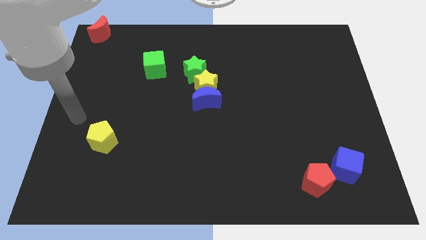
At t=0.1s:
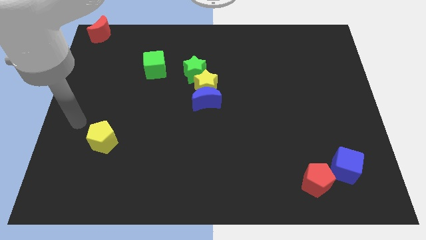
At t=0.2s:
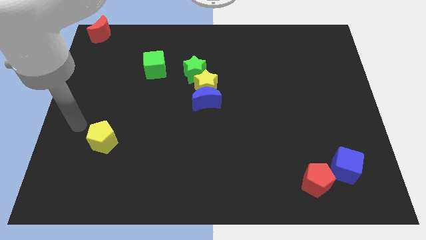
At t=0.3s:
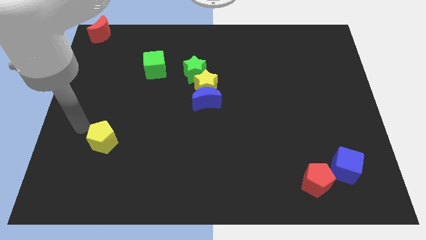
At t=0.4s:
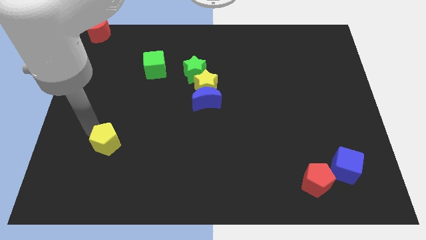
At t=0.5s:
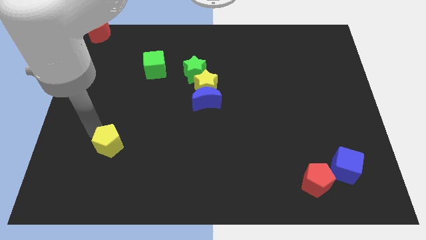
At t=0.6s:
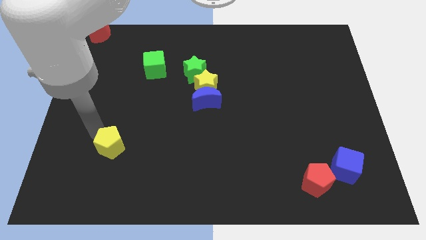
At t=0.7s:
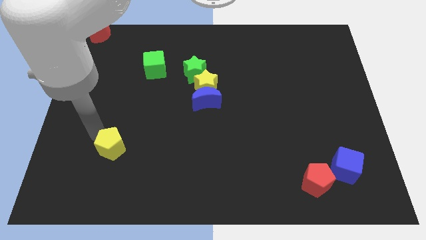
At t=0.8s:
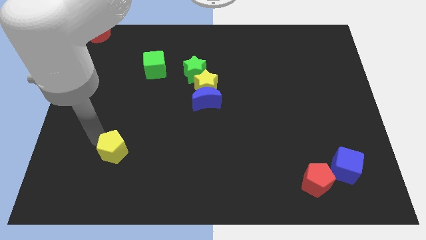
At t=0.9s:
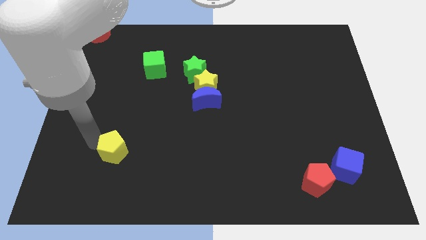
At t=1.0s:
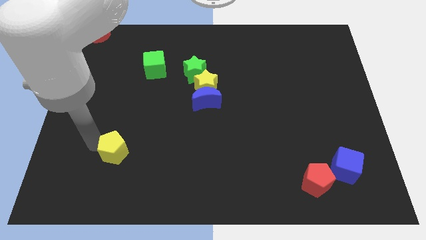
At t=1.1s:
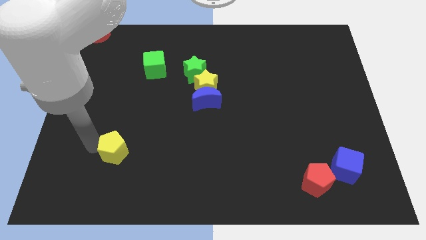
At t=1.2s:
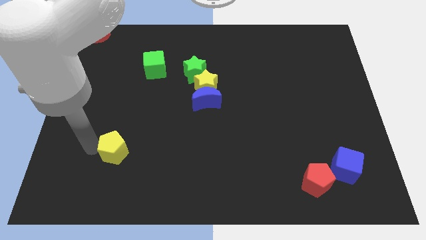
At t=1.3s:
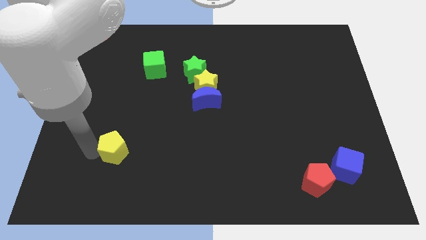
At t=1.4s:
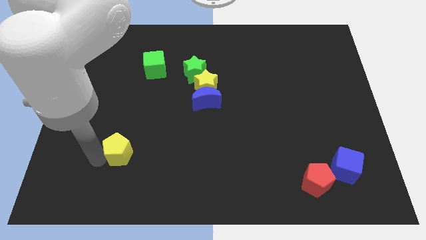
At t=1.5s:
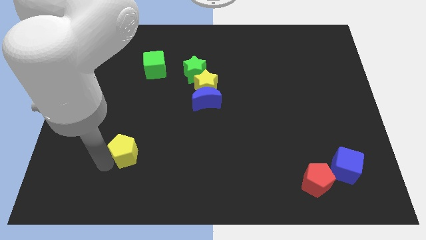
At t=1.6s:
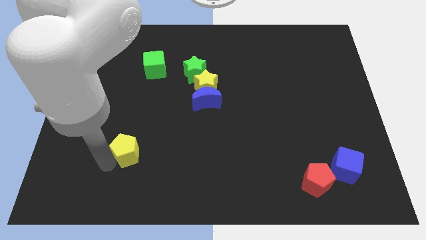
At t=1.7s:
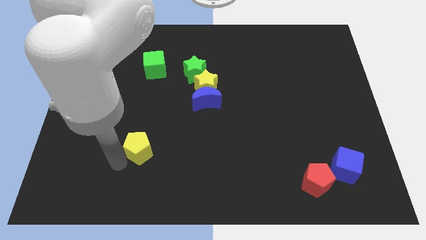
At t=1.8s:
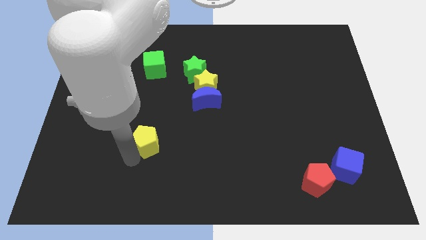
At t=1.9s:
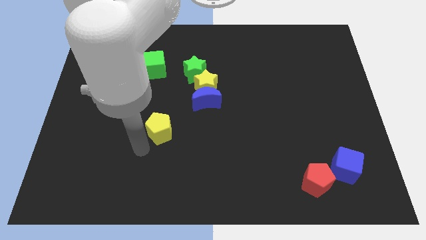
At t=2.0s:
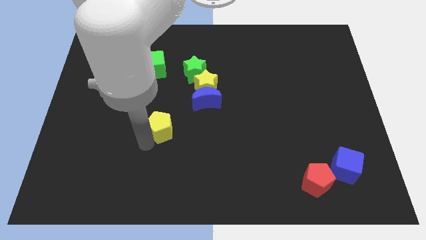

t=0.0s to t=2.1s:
place the yellow pentagon below the green cube

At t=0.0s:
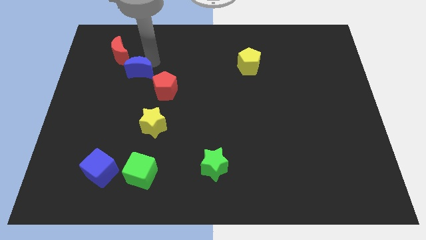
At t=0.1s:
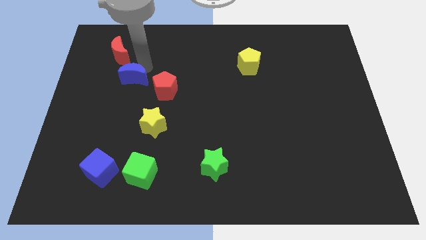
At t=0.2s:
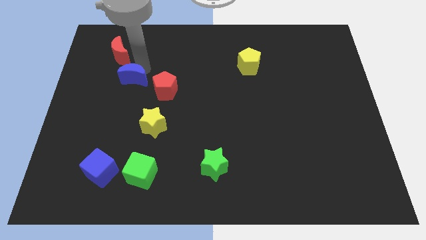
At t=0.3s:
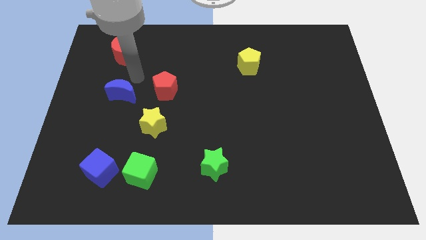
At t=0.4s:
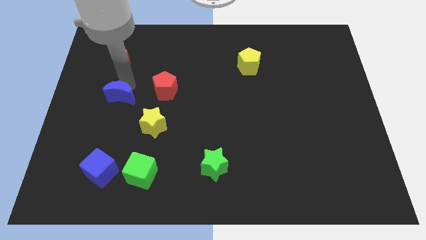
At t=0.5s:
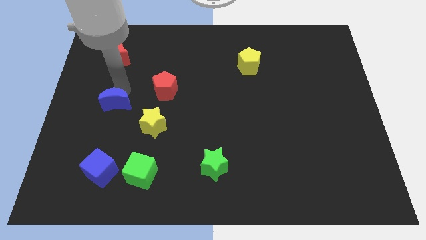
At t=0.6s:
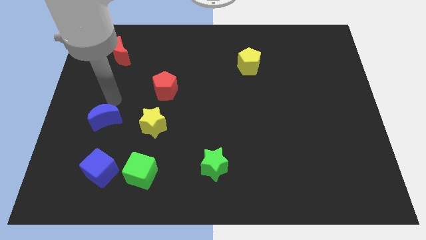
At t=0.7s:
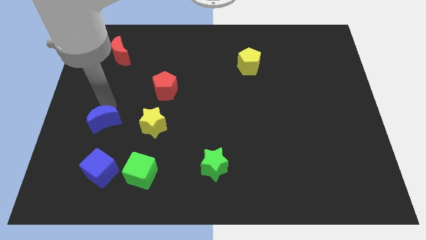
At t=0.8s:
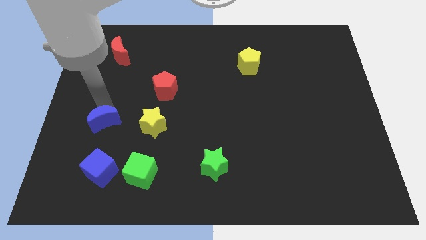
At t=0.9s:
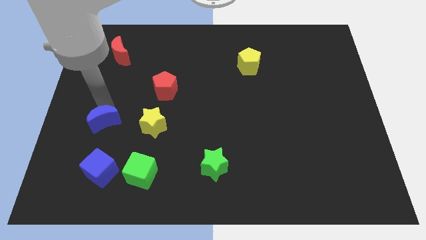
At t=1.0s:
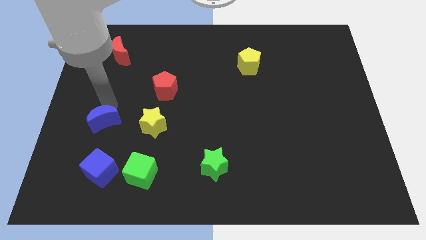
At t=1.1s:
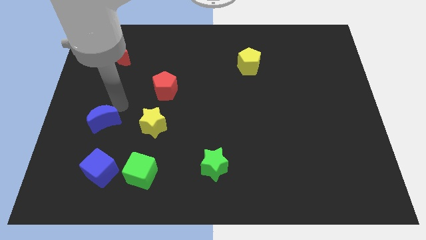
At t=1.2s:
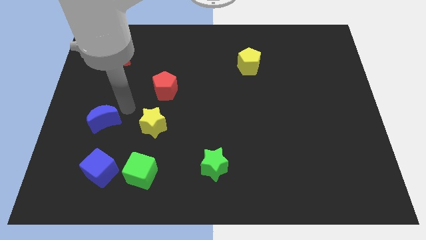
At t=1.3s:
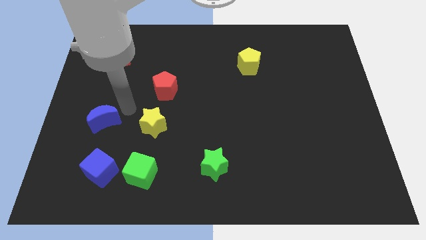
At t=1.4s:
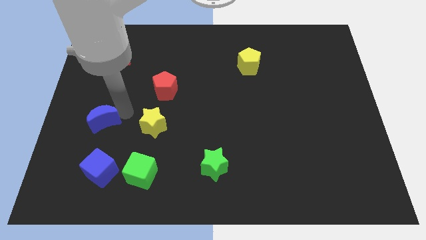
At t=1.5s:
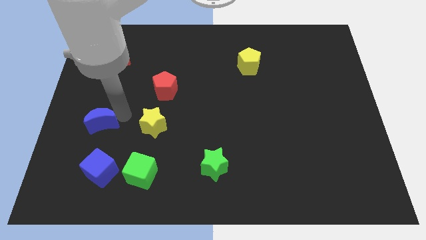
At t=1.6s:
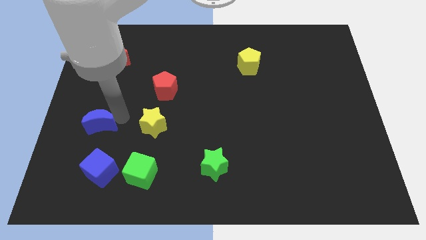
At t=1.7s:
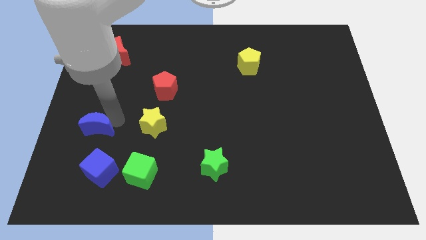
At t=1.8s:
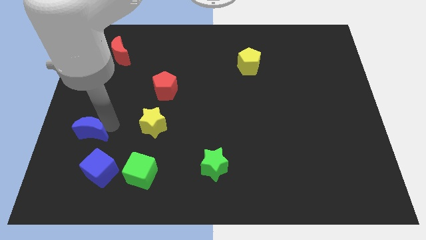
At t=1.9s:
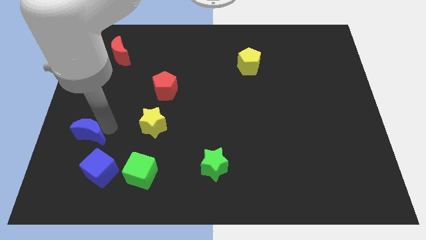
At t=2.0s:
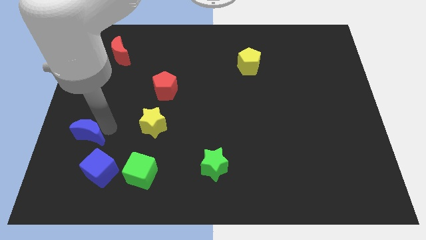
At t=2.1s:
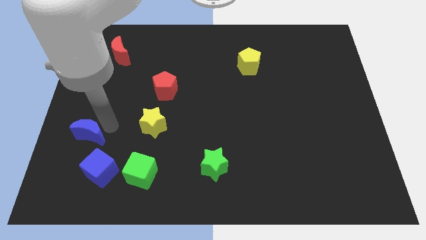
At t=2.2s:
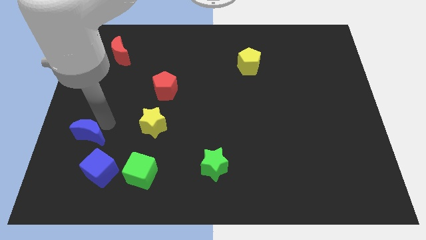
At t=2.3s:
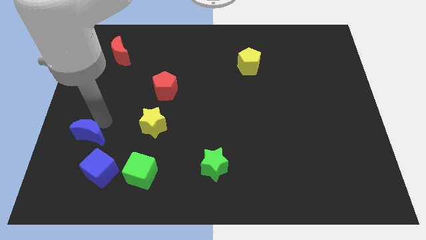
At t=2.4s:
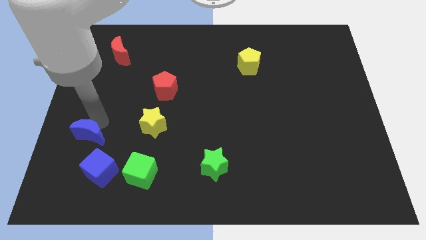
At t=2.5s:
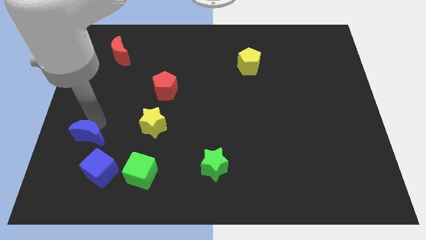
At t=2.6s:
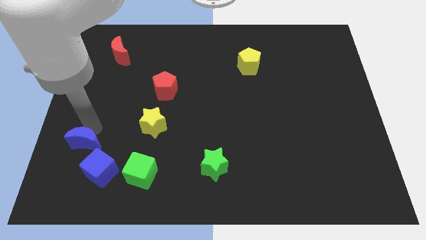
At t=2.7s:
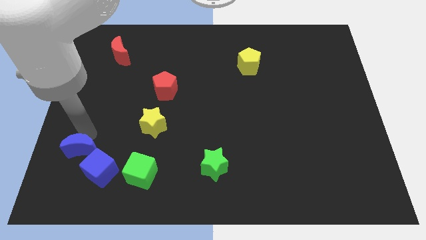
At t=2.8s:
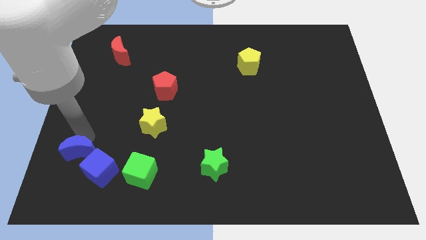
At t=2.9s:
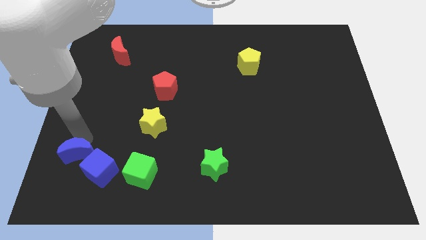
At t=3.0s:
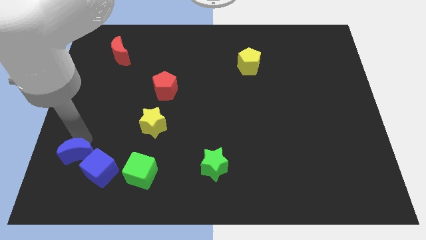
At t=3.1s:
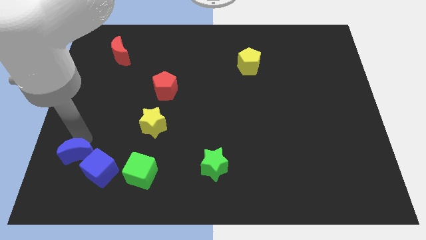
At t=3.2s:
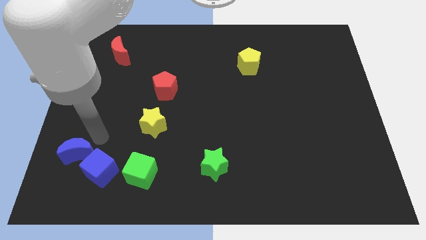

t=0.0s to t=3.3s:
move the blue crescent close to the blue cube

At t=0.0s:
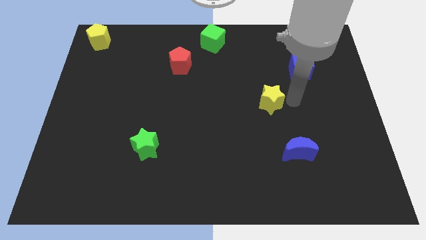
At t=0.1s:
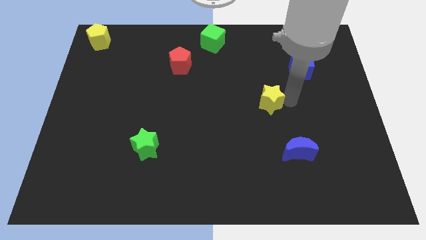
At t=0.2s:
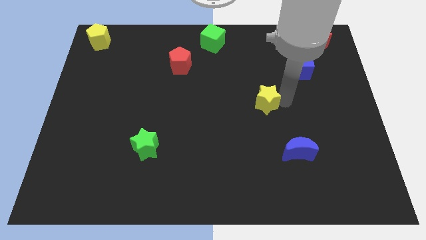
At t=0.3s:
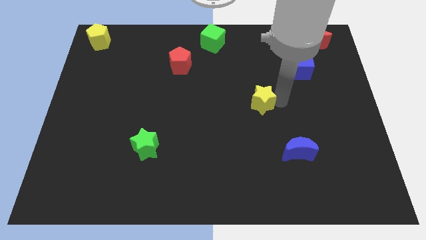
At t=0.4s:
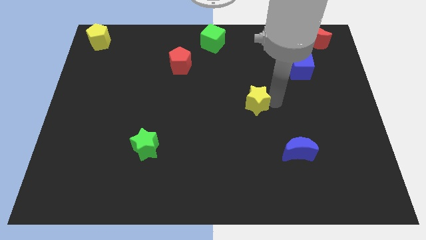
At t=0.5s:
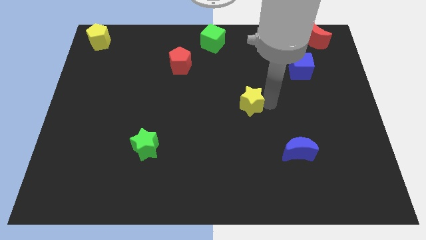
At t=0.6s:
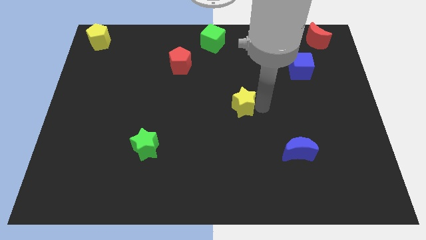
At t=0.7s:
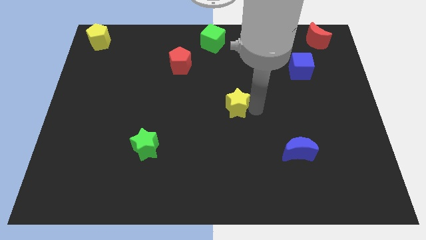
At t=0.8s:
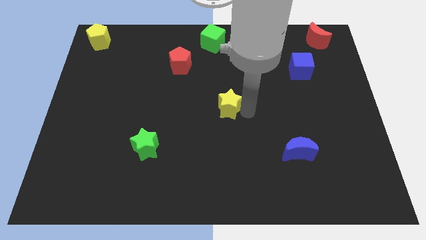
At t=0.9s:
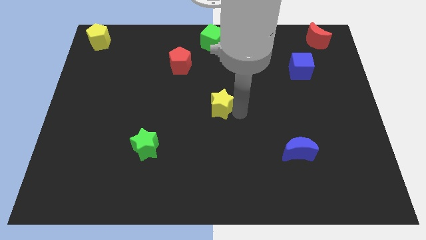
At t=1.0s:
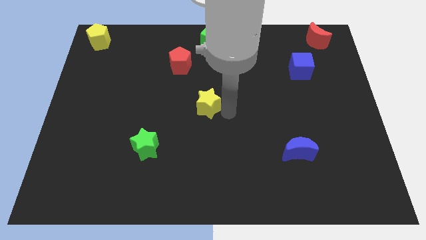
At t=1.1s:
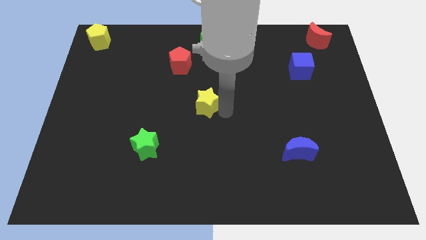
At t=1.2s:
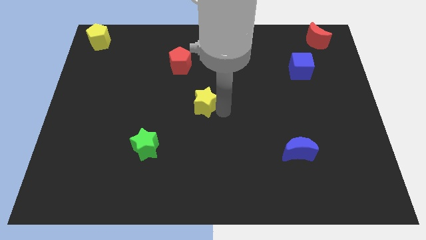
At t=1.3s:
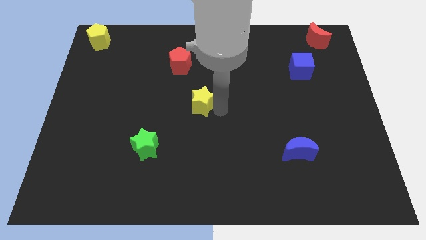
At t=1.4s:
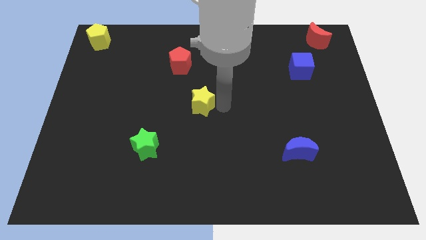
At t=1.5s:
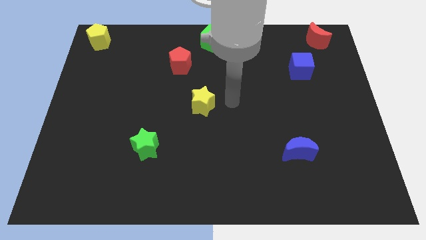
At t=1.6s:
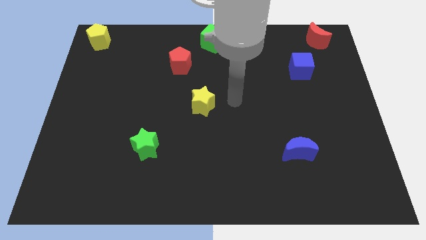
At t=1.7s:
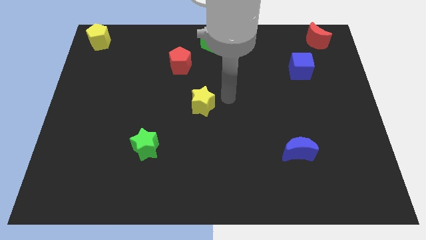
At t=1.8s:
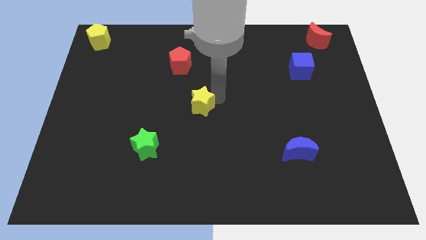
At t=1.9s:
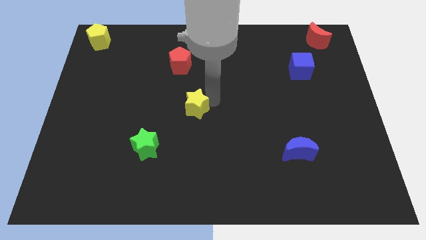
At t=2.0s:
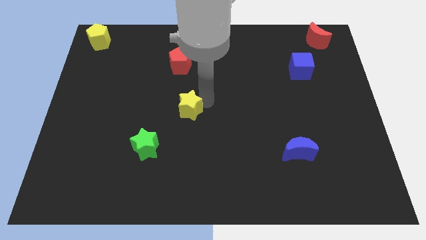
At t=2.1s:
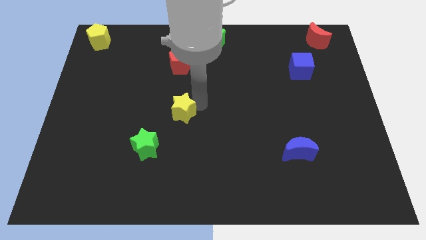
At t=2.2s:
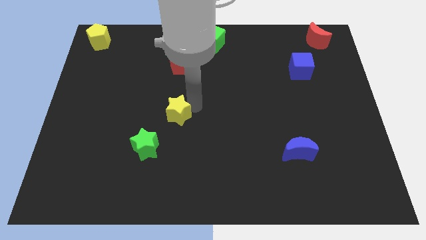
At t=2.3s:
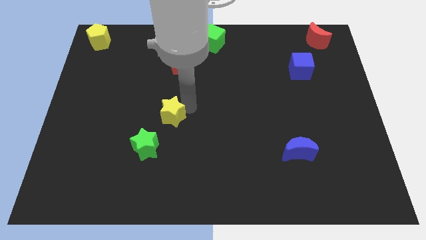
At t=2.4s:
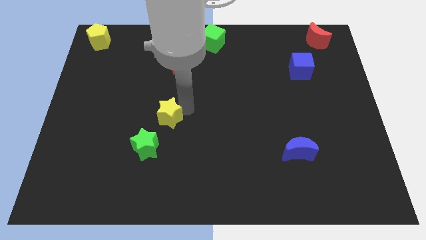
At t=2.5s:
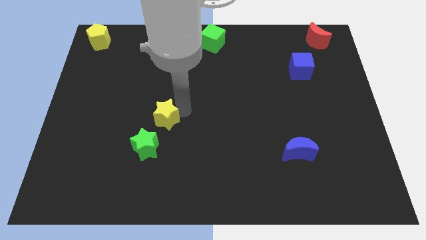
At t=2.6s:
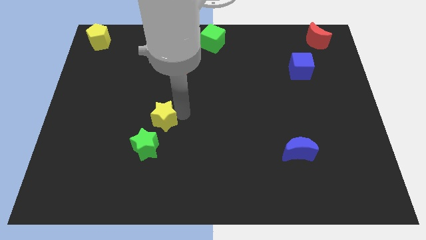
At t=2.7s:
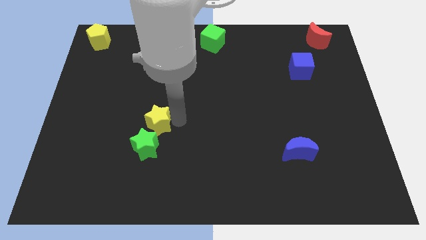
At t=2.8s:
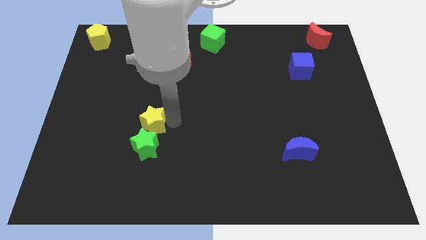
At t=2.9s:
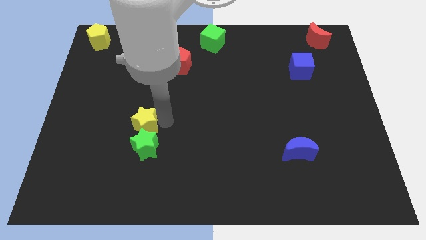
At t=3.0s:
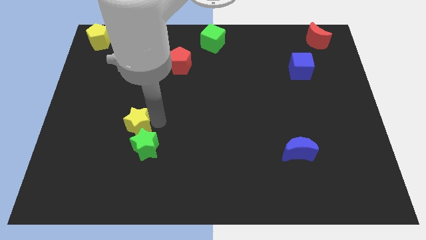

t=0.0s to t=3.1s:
move the yellow star above the green star

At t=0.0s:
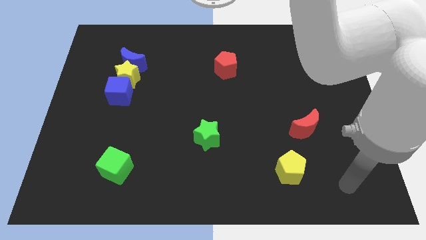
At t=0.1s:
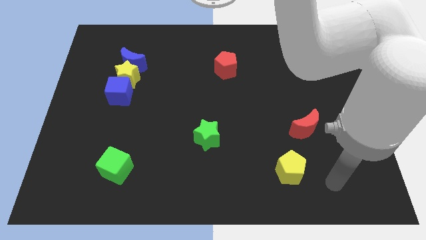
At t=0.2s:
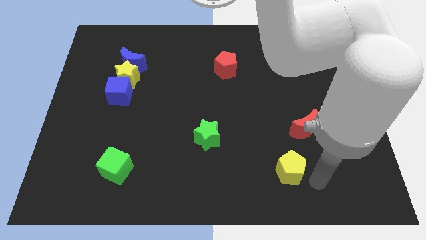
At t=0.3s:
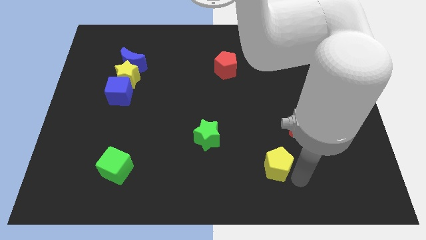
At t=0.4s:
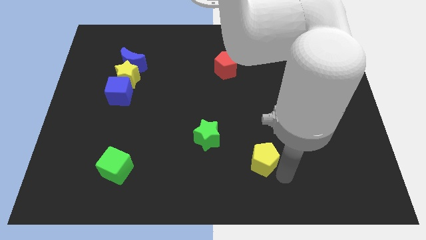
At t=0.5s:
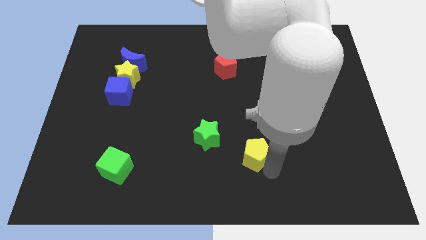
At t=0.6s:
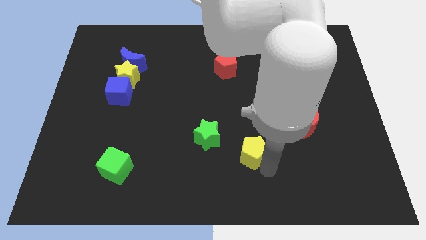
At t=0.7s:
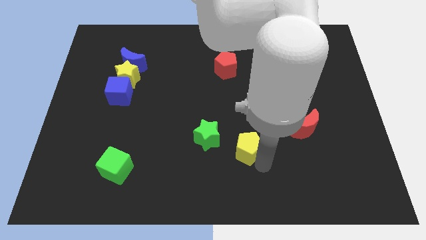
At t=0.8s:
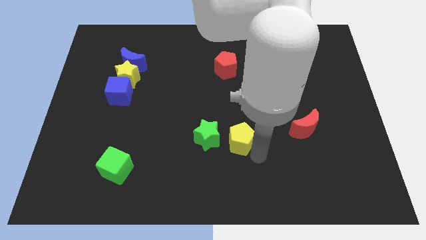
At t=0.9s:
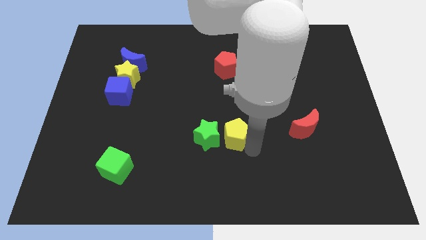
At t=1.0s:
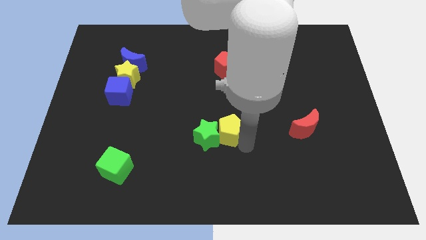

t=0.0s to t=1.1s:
move the yellow pentagon to the right of green star
